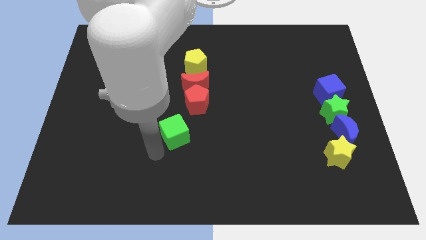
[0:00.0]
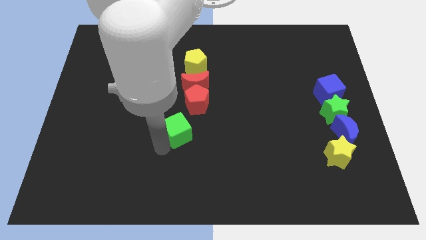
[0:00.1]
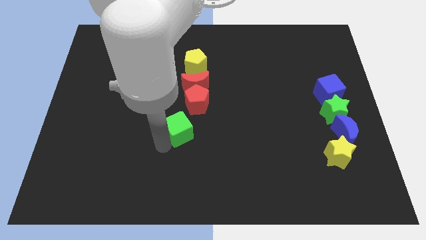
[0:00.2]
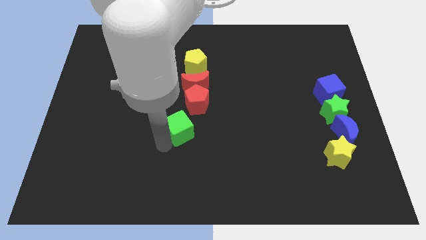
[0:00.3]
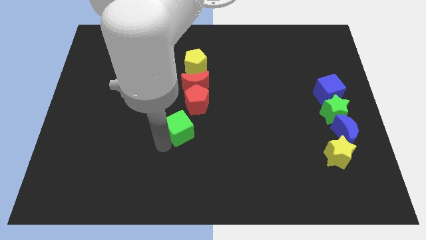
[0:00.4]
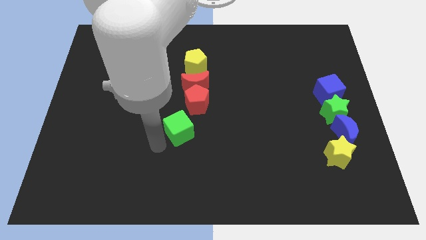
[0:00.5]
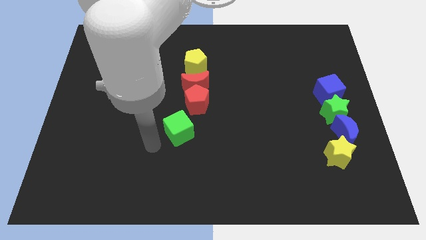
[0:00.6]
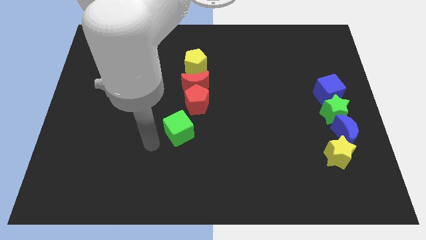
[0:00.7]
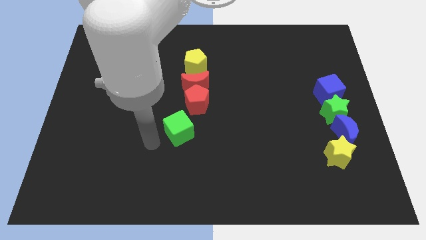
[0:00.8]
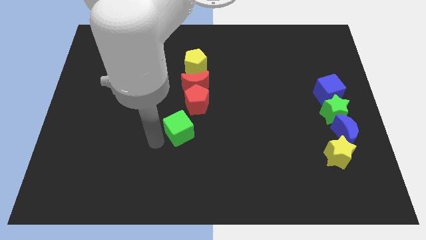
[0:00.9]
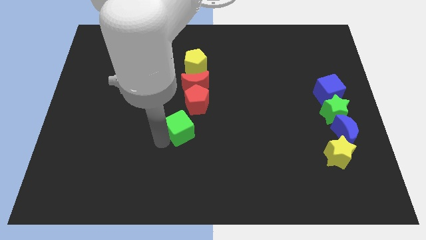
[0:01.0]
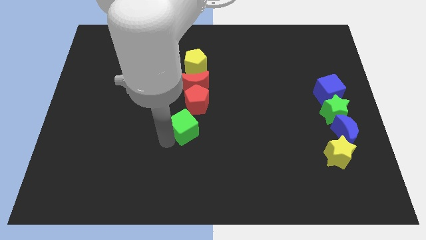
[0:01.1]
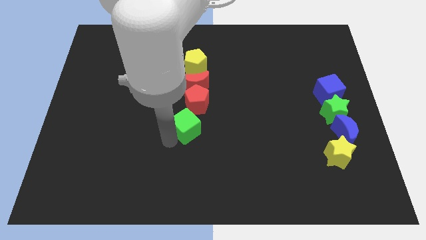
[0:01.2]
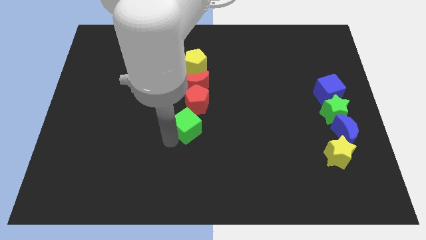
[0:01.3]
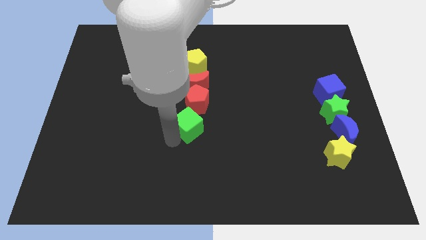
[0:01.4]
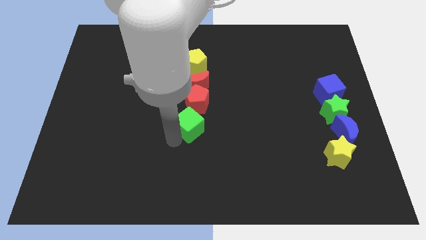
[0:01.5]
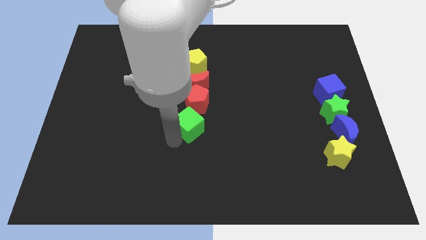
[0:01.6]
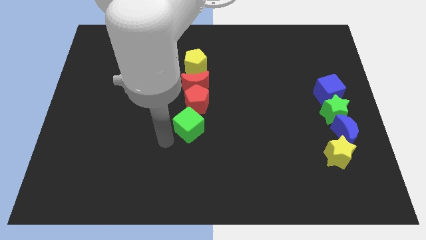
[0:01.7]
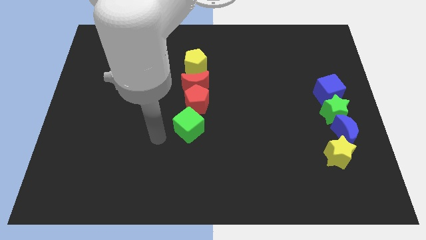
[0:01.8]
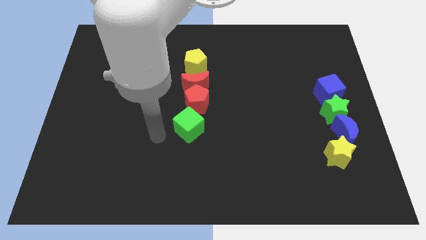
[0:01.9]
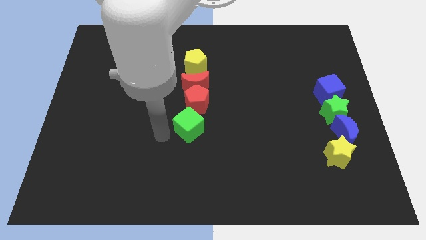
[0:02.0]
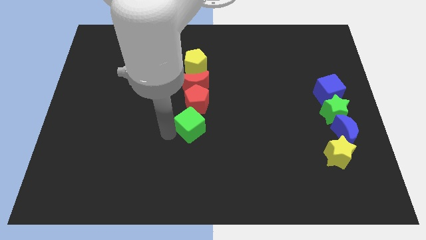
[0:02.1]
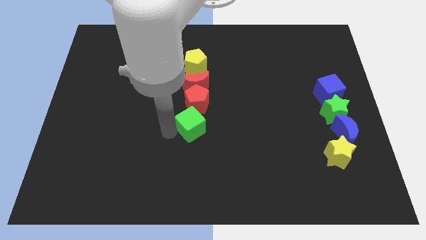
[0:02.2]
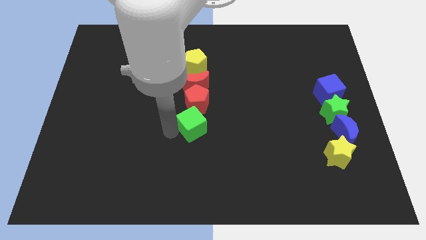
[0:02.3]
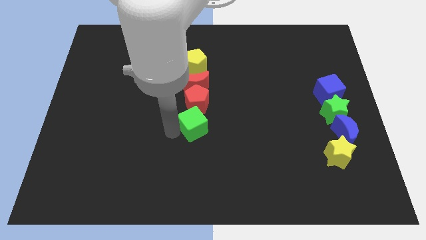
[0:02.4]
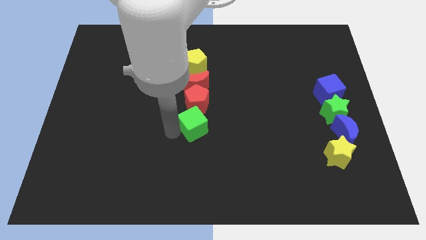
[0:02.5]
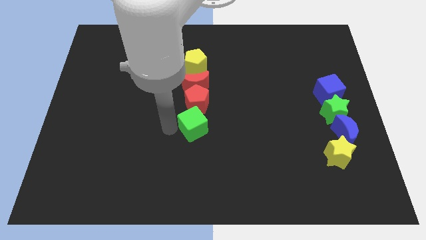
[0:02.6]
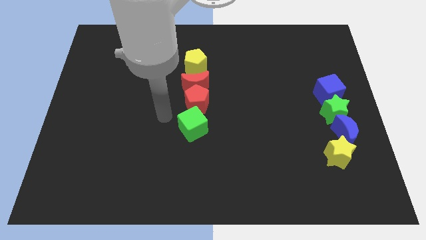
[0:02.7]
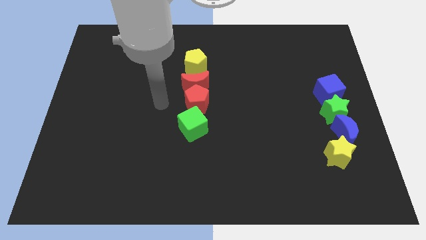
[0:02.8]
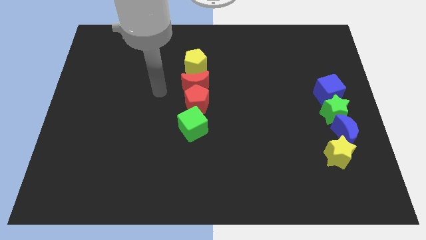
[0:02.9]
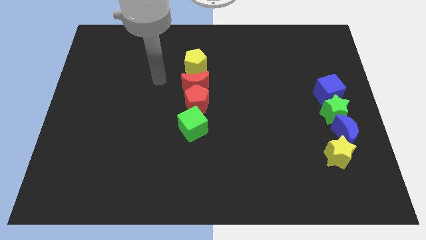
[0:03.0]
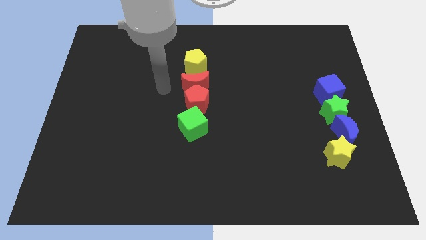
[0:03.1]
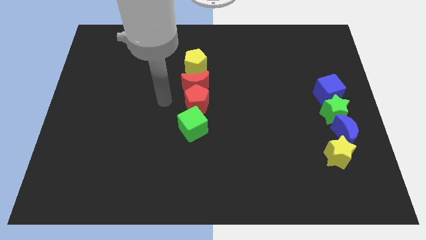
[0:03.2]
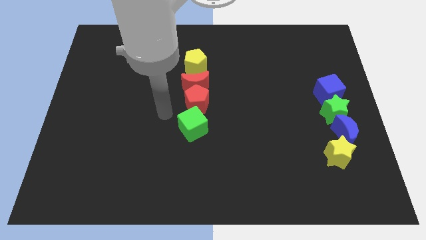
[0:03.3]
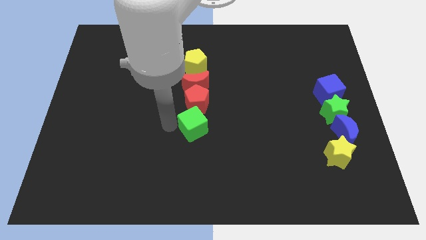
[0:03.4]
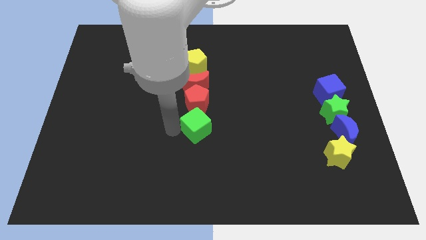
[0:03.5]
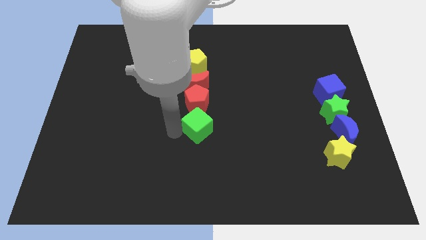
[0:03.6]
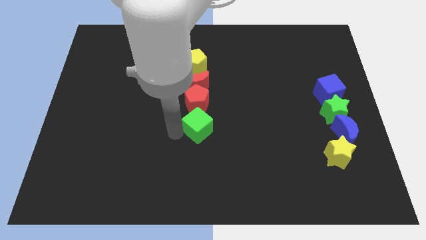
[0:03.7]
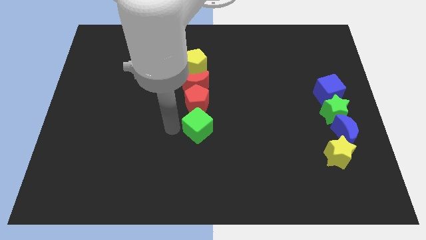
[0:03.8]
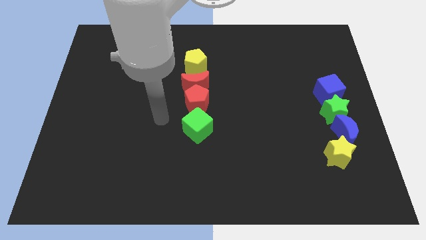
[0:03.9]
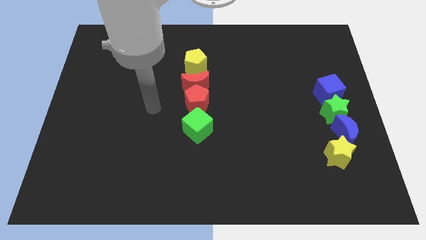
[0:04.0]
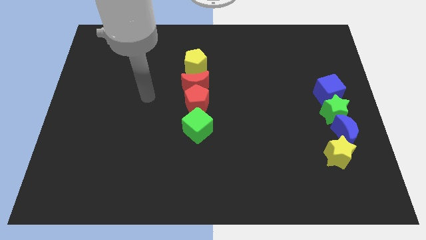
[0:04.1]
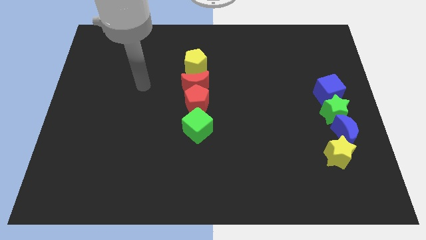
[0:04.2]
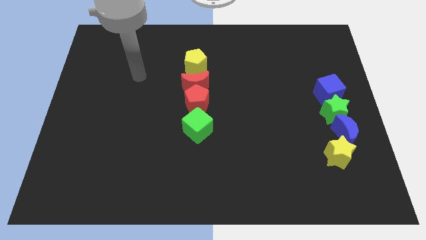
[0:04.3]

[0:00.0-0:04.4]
adjust the green cube to form a vertical line with red blocks and the yellow pentagon

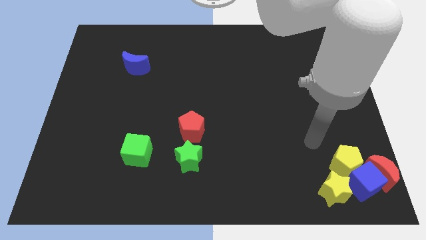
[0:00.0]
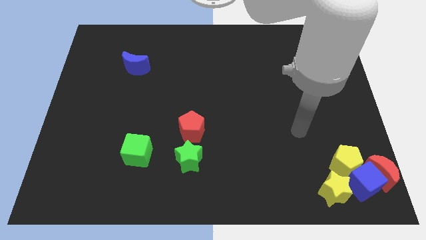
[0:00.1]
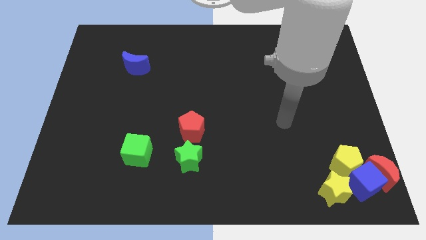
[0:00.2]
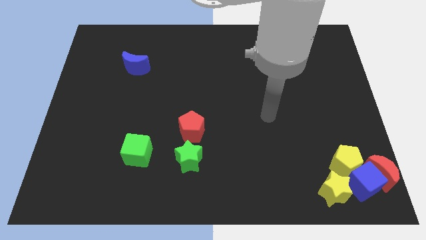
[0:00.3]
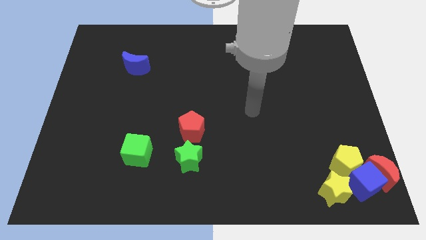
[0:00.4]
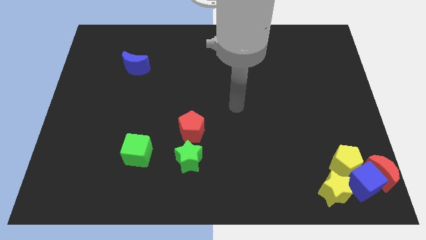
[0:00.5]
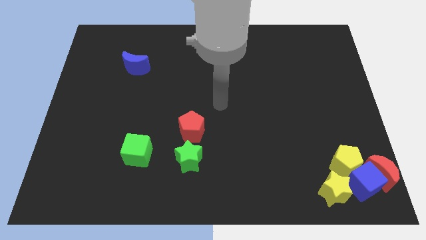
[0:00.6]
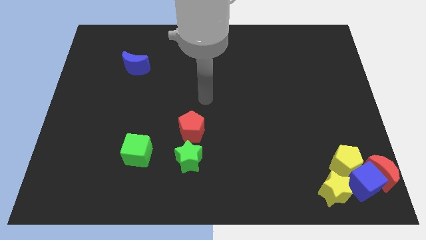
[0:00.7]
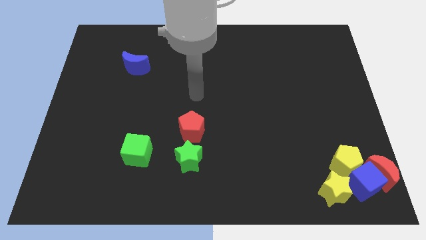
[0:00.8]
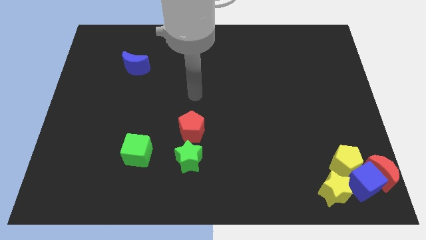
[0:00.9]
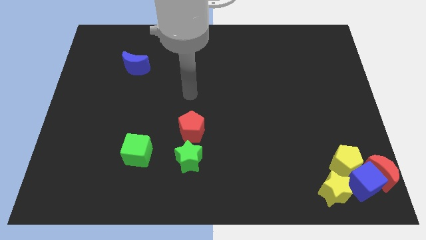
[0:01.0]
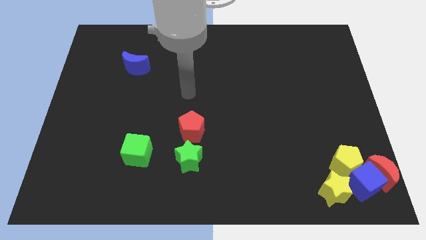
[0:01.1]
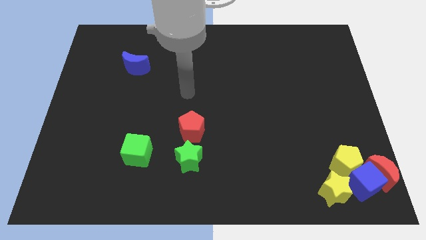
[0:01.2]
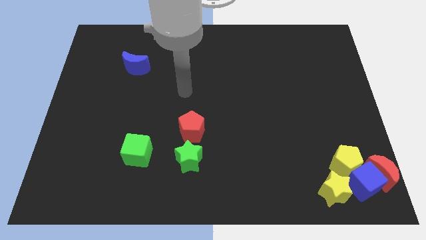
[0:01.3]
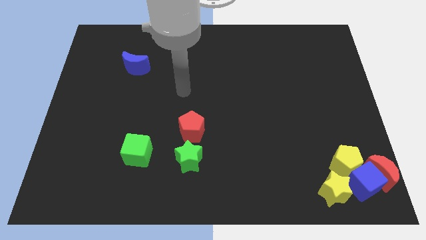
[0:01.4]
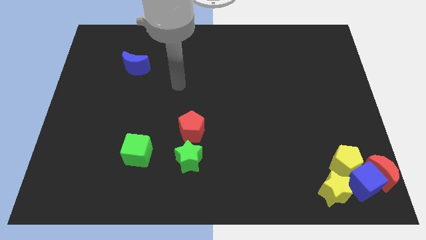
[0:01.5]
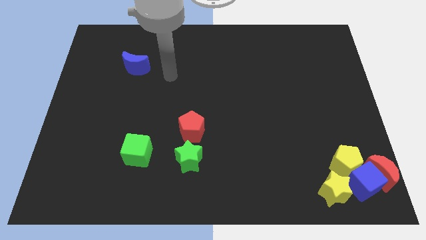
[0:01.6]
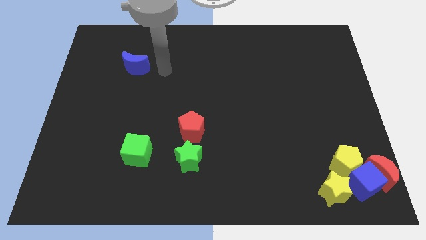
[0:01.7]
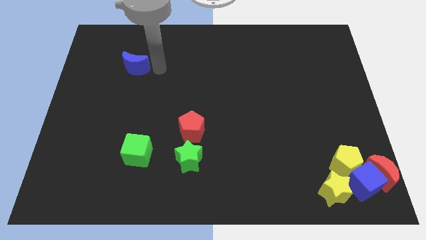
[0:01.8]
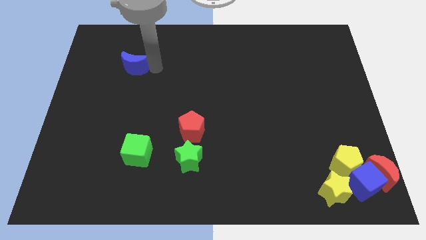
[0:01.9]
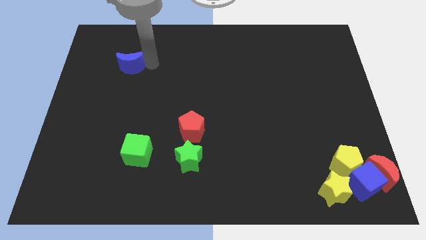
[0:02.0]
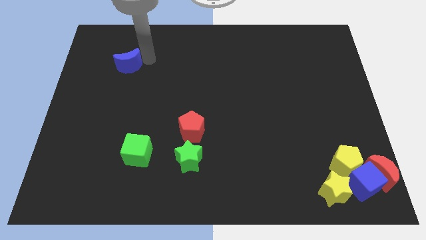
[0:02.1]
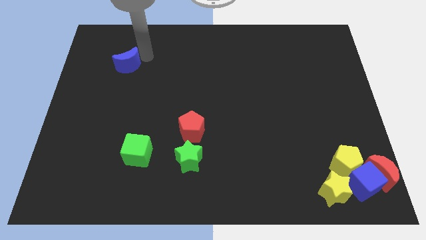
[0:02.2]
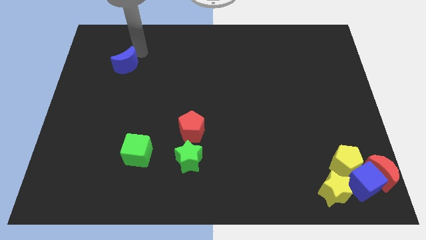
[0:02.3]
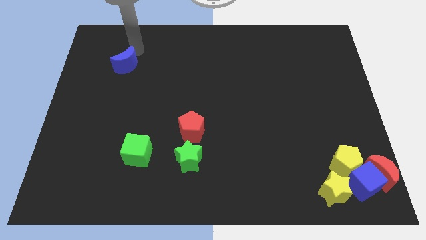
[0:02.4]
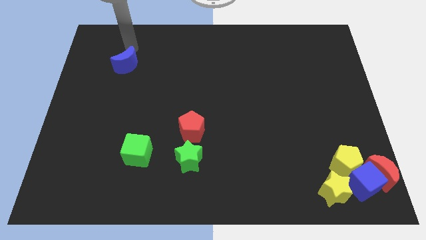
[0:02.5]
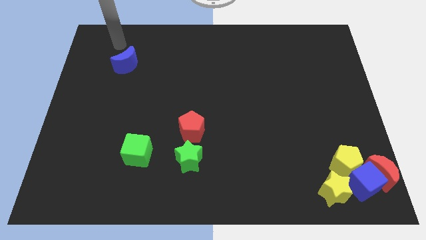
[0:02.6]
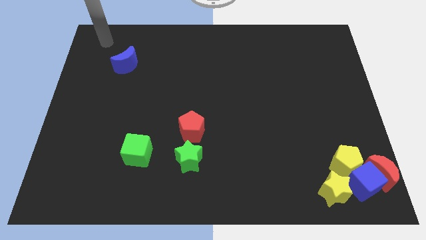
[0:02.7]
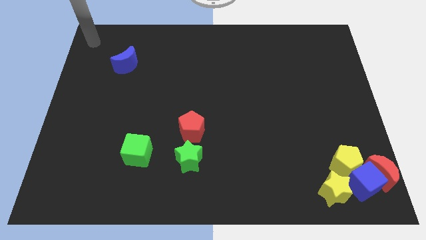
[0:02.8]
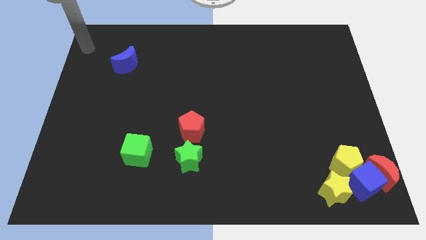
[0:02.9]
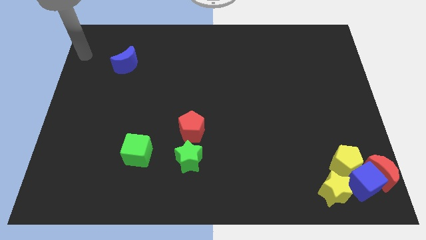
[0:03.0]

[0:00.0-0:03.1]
move your arm to the top left corner of the board

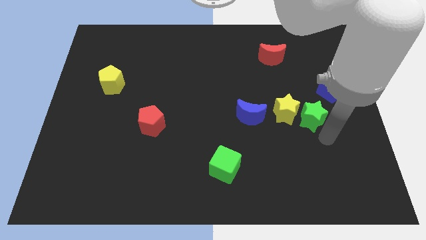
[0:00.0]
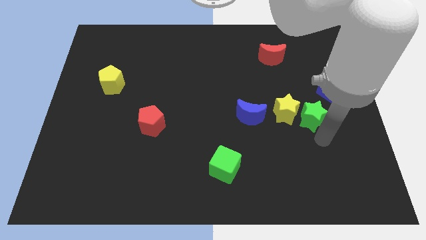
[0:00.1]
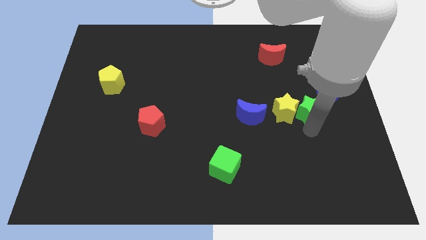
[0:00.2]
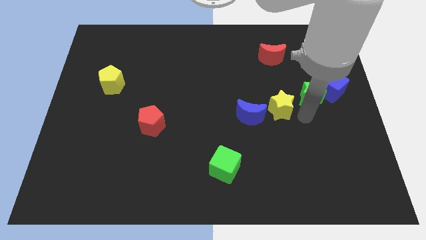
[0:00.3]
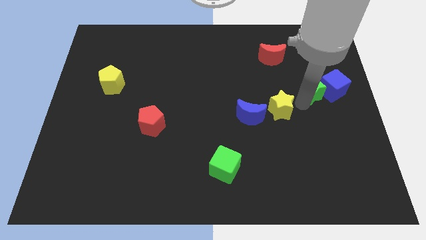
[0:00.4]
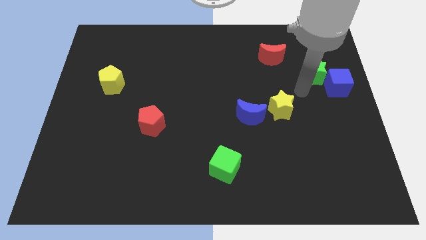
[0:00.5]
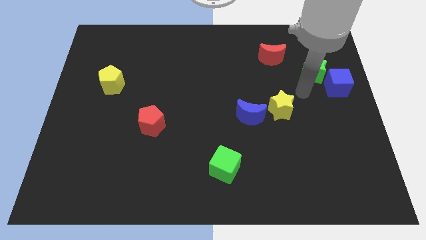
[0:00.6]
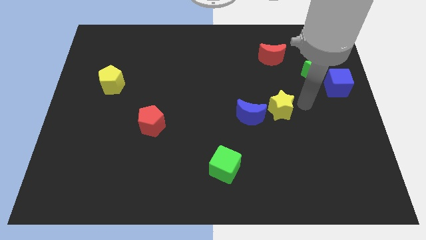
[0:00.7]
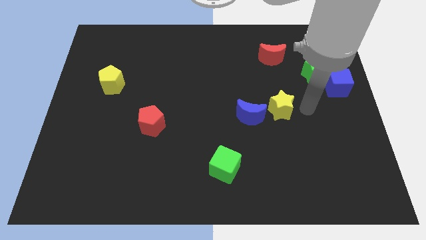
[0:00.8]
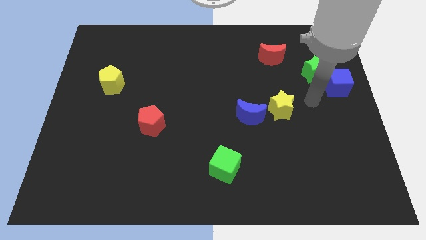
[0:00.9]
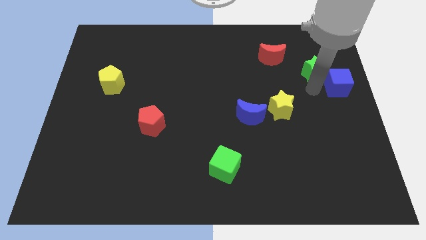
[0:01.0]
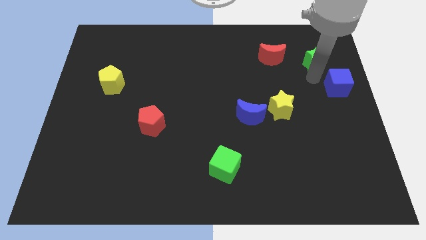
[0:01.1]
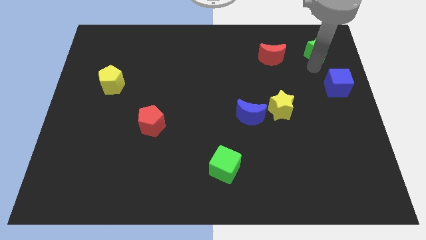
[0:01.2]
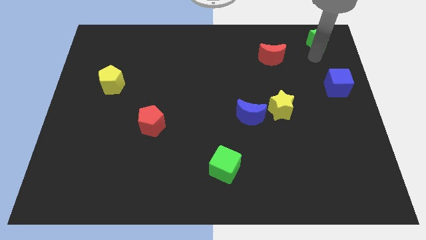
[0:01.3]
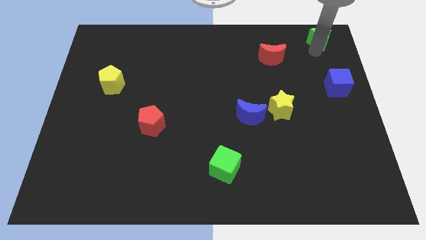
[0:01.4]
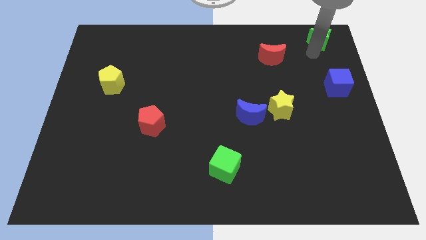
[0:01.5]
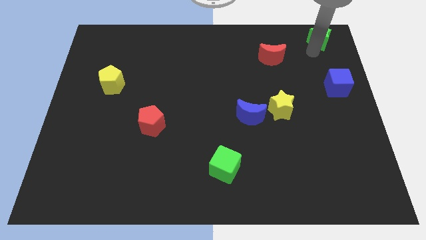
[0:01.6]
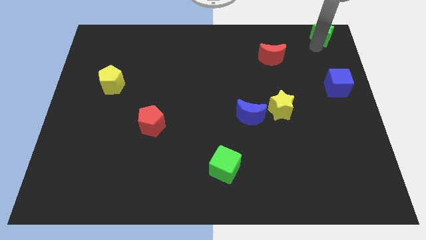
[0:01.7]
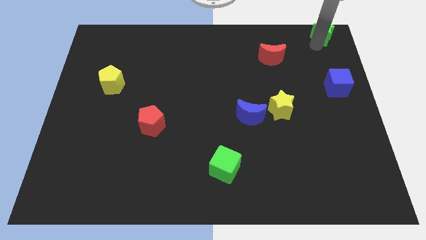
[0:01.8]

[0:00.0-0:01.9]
place the green star above the blue cube
